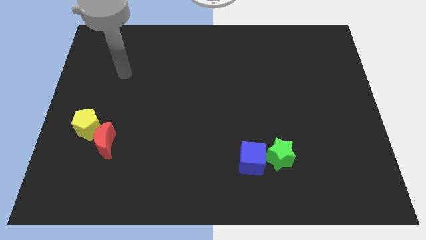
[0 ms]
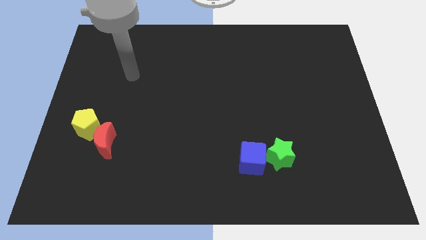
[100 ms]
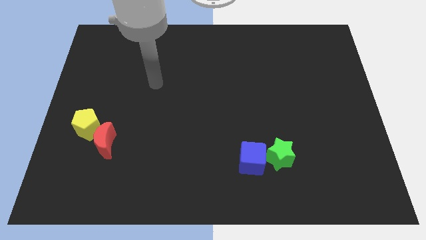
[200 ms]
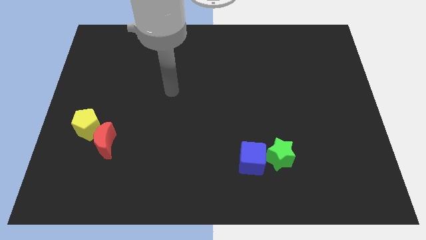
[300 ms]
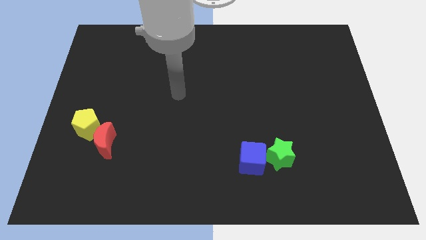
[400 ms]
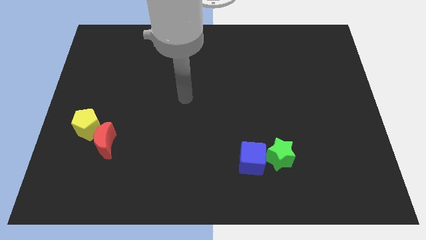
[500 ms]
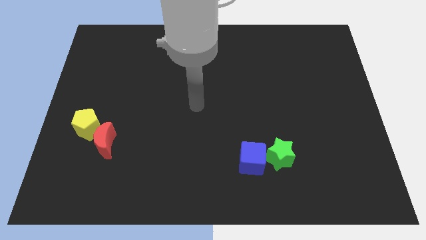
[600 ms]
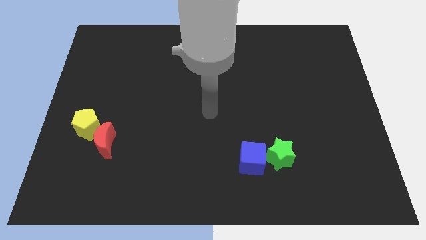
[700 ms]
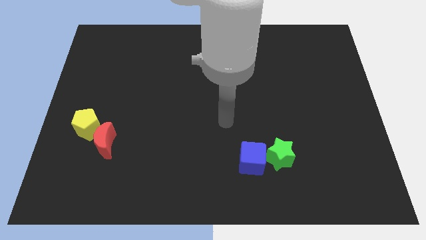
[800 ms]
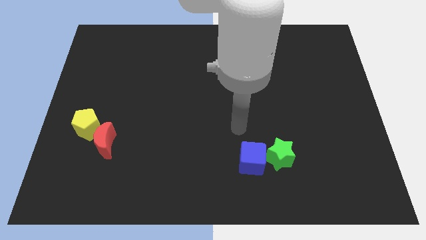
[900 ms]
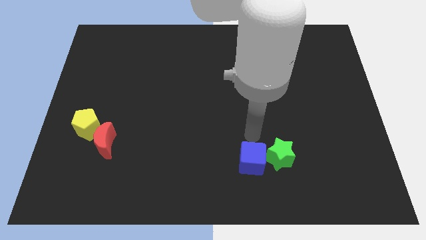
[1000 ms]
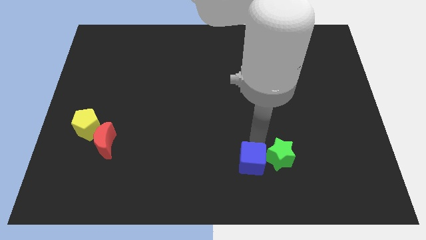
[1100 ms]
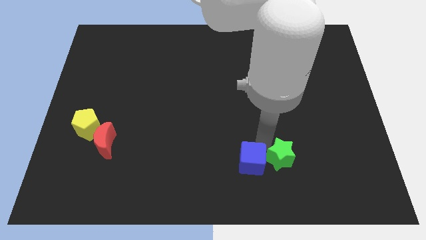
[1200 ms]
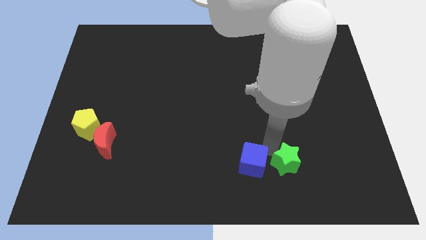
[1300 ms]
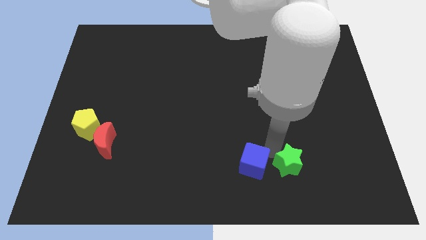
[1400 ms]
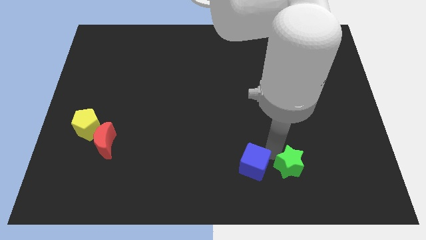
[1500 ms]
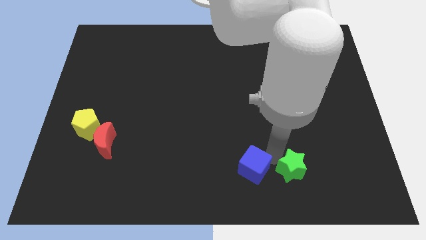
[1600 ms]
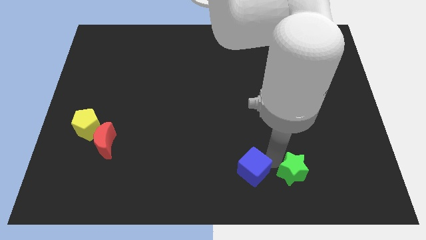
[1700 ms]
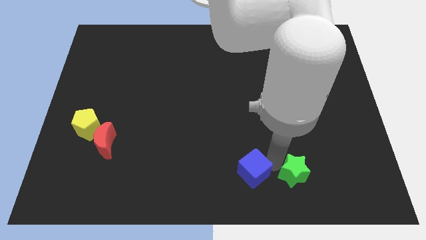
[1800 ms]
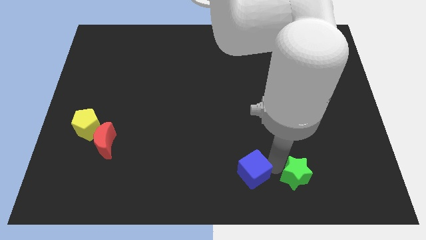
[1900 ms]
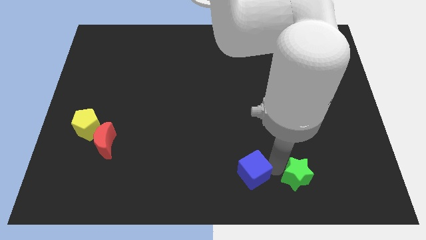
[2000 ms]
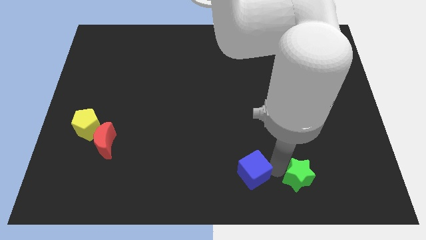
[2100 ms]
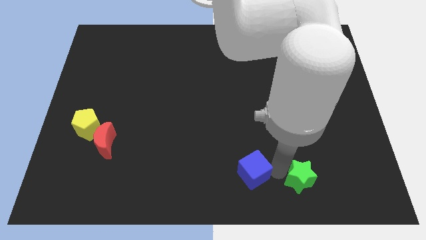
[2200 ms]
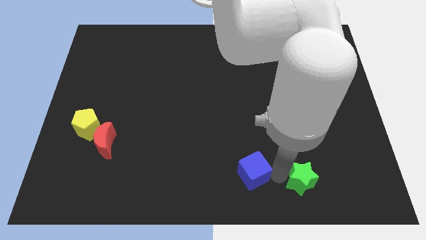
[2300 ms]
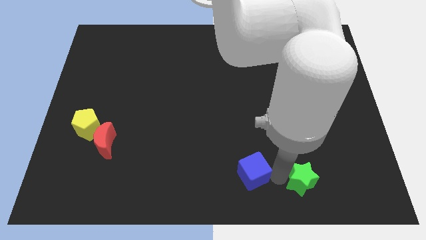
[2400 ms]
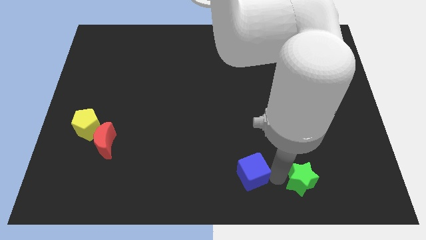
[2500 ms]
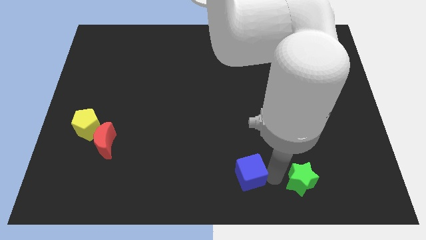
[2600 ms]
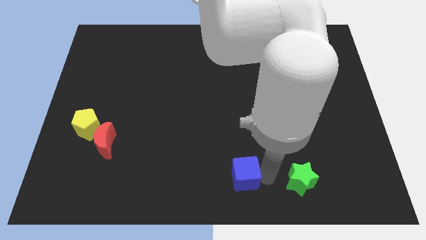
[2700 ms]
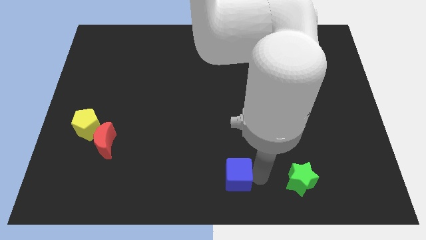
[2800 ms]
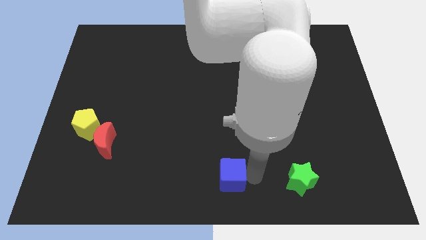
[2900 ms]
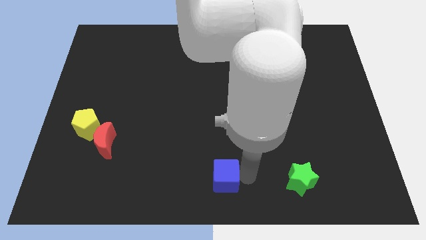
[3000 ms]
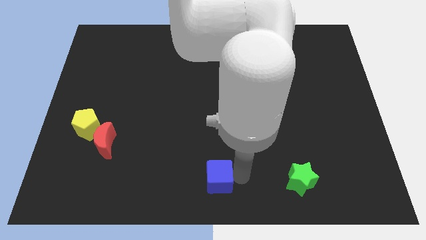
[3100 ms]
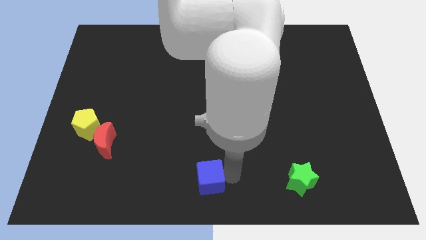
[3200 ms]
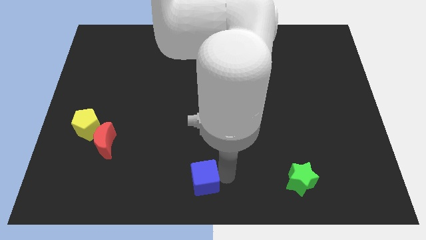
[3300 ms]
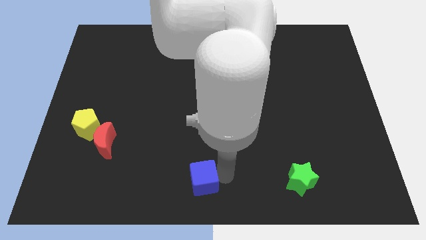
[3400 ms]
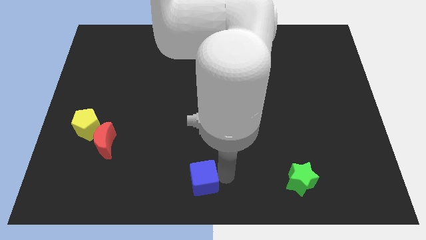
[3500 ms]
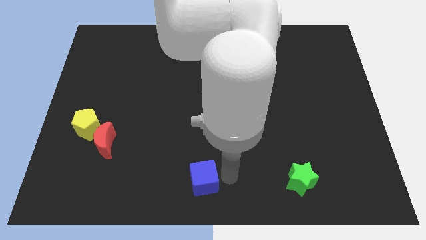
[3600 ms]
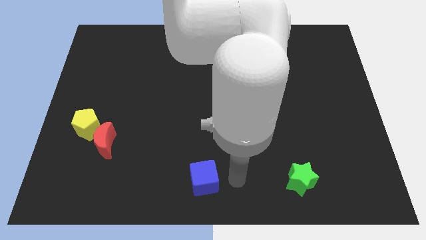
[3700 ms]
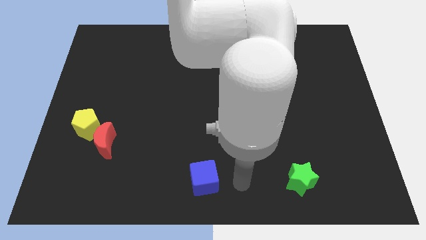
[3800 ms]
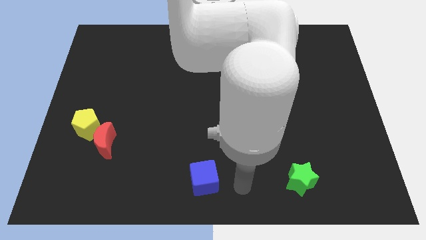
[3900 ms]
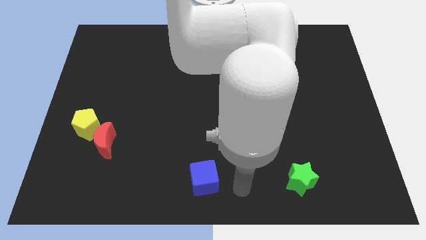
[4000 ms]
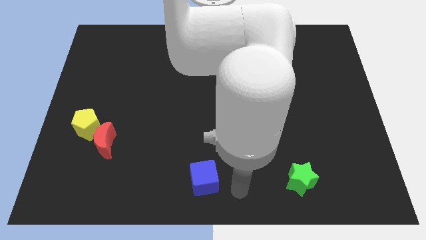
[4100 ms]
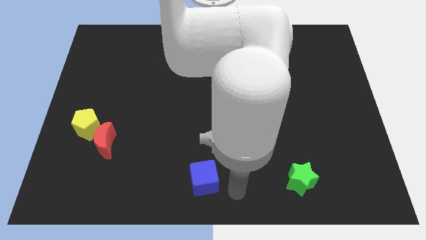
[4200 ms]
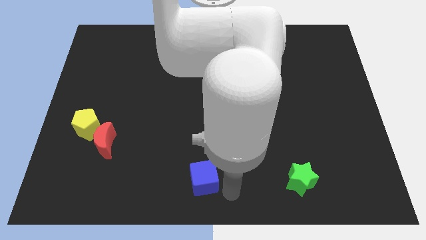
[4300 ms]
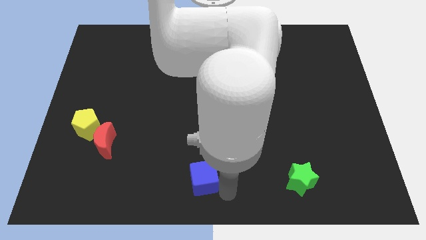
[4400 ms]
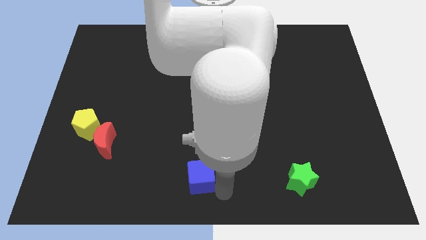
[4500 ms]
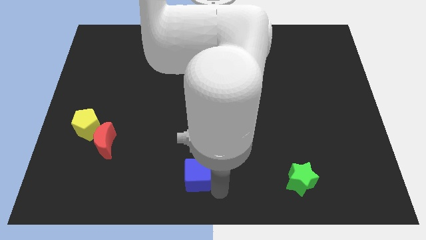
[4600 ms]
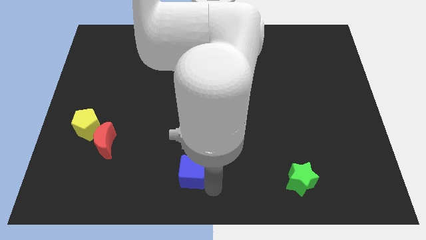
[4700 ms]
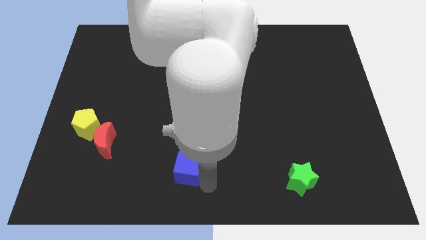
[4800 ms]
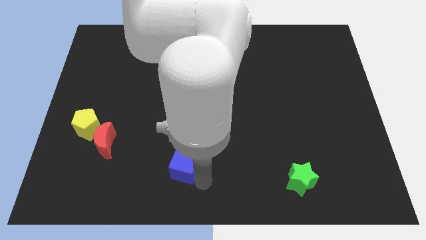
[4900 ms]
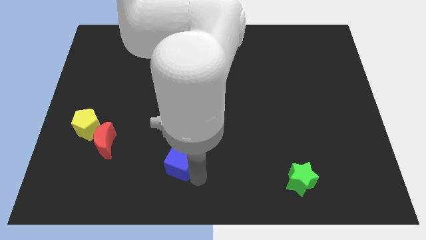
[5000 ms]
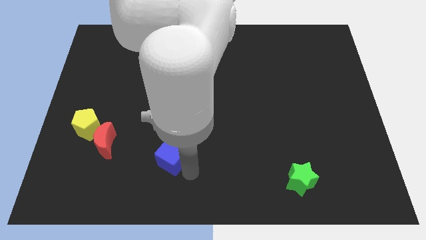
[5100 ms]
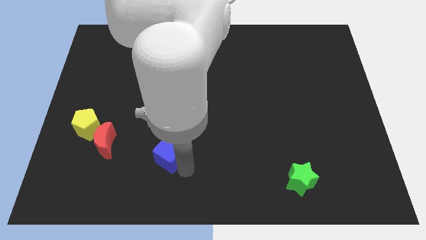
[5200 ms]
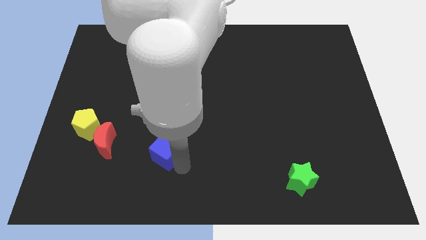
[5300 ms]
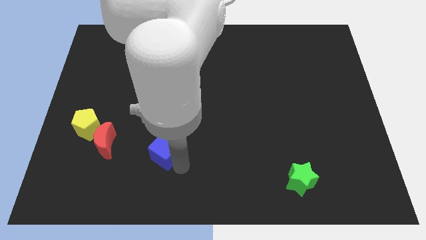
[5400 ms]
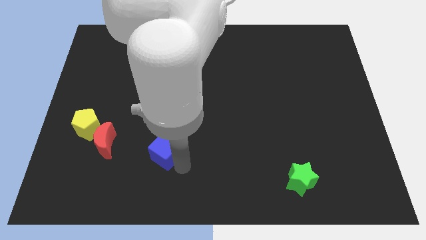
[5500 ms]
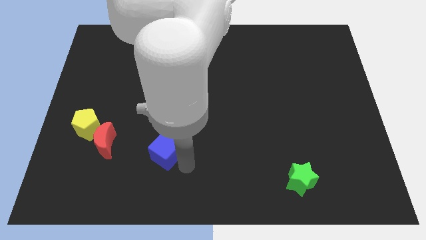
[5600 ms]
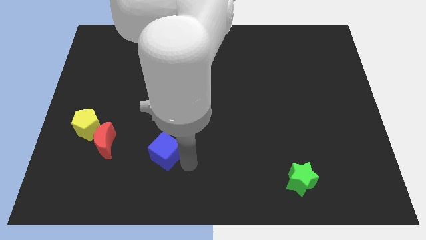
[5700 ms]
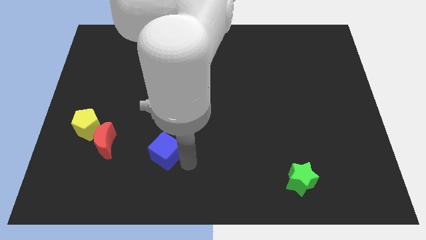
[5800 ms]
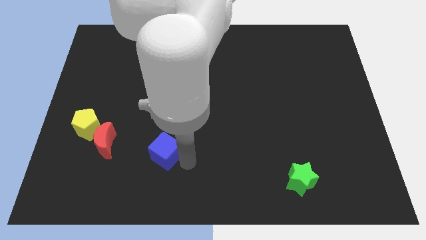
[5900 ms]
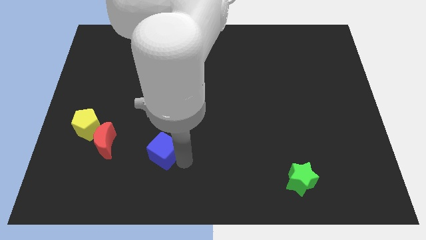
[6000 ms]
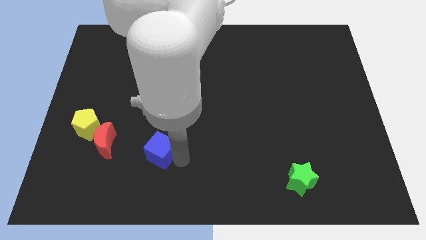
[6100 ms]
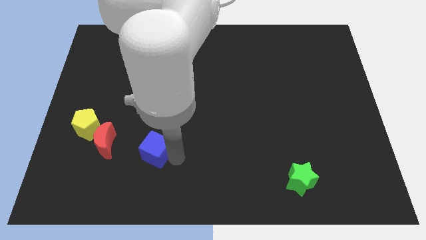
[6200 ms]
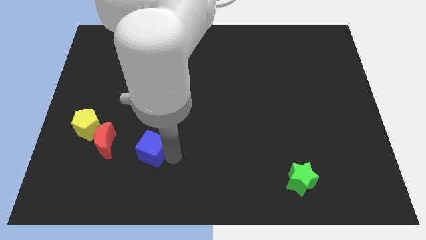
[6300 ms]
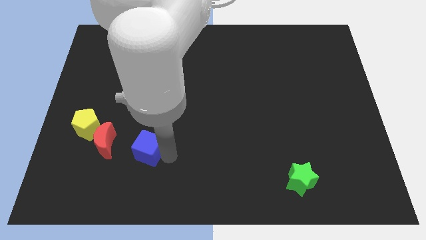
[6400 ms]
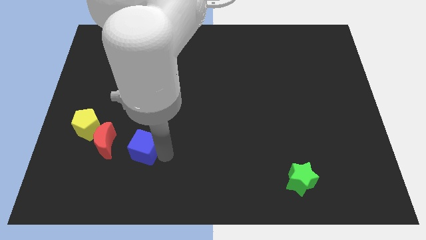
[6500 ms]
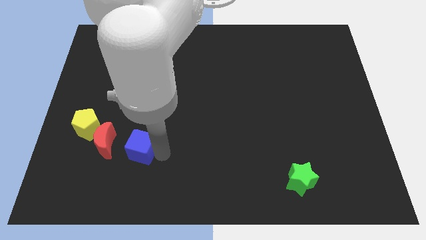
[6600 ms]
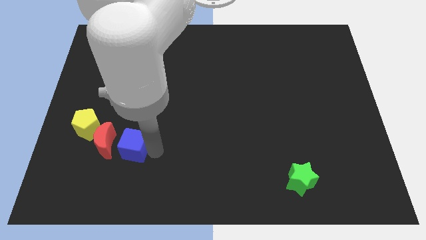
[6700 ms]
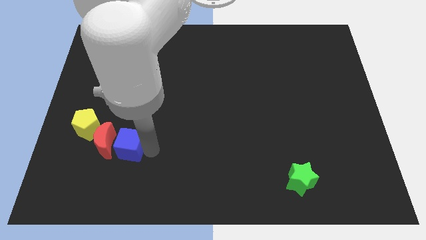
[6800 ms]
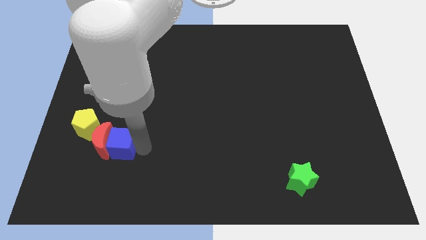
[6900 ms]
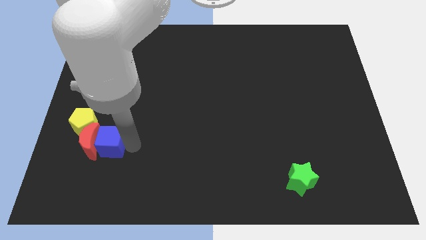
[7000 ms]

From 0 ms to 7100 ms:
slide the blue cube to the red moon

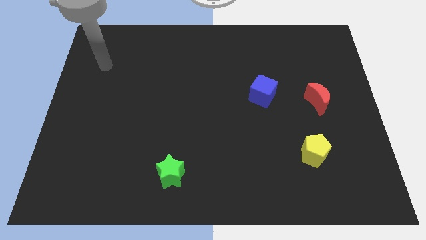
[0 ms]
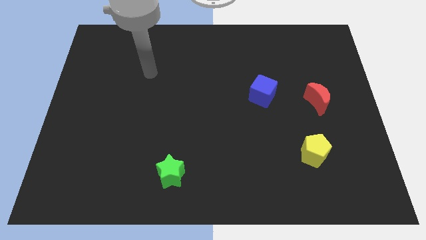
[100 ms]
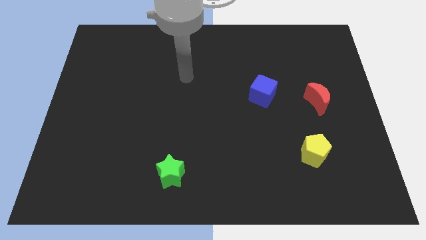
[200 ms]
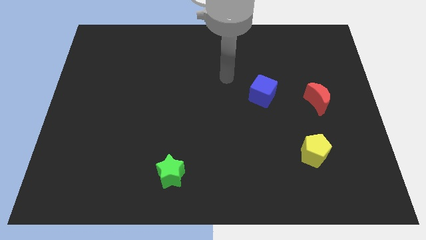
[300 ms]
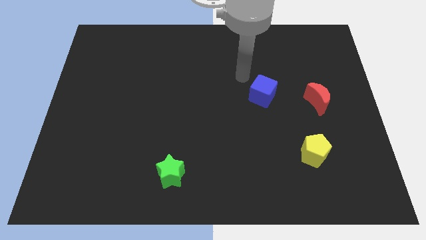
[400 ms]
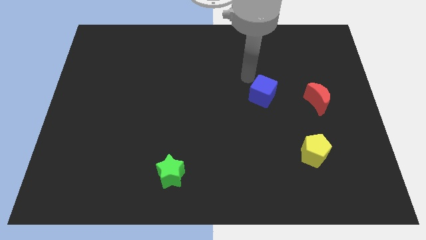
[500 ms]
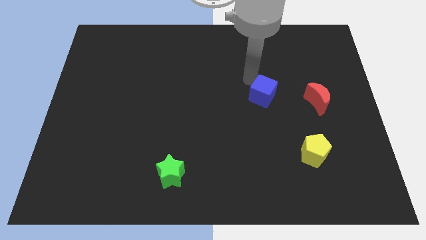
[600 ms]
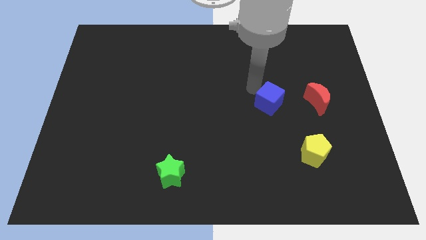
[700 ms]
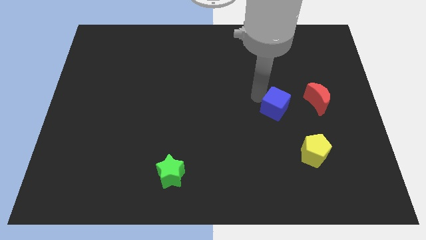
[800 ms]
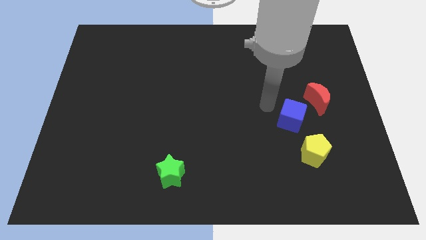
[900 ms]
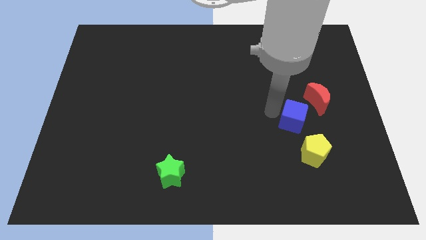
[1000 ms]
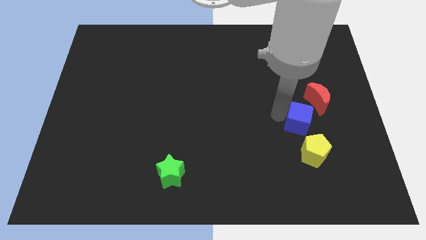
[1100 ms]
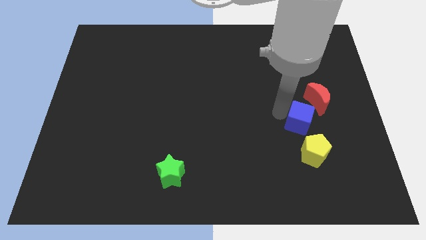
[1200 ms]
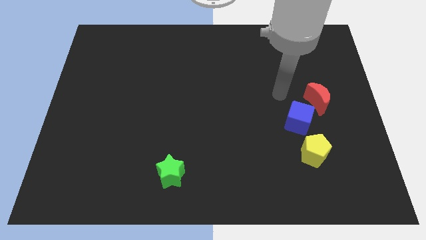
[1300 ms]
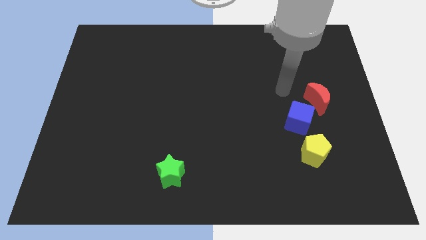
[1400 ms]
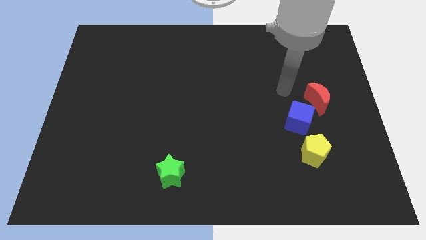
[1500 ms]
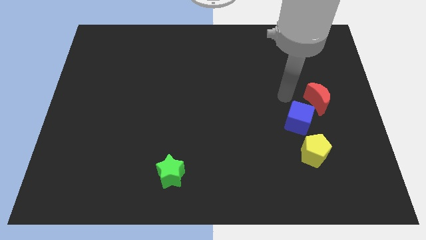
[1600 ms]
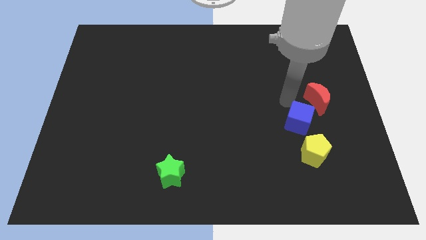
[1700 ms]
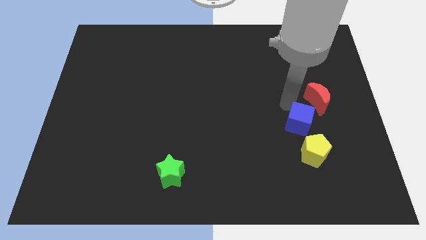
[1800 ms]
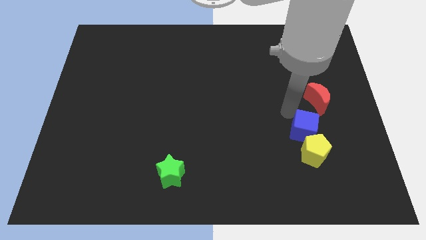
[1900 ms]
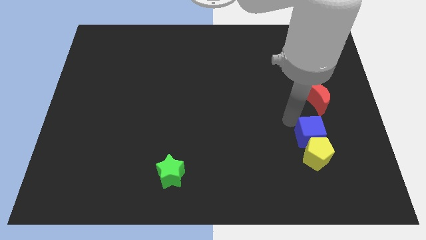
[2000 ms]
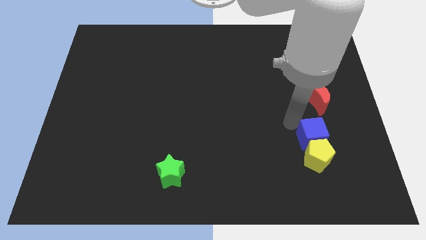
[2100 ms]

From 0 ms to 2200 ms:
slide the cube to the yellow block
